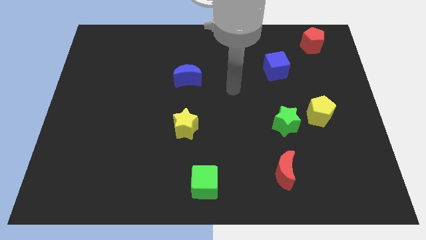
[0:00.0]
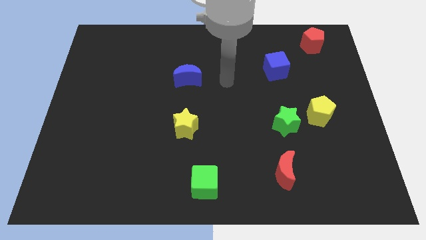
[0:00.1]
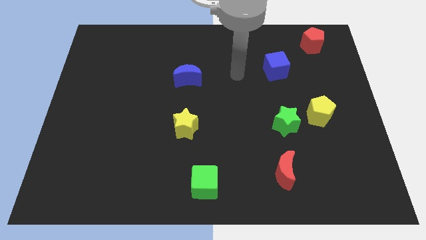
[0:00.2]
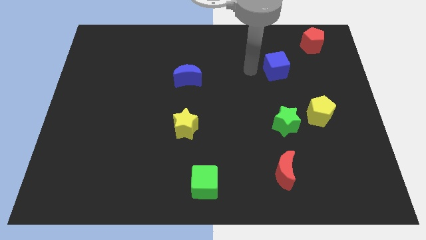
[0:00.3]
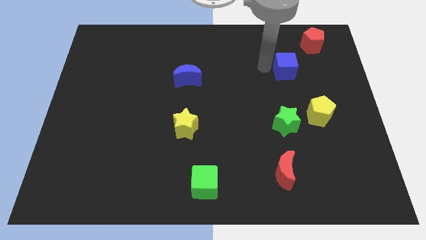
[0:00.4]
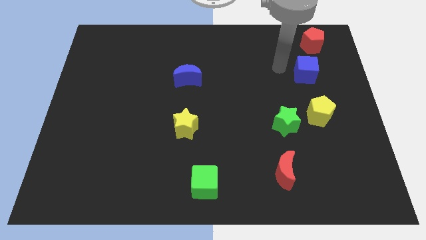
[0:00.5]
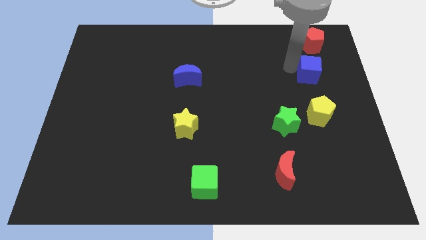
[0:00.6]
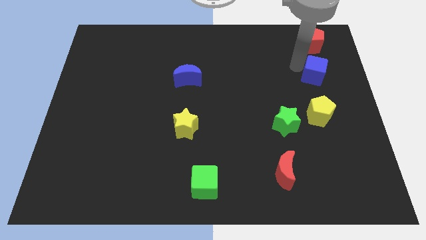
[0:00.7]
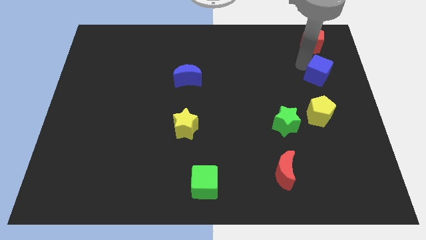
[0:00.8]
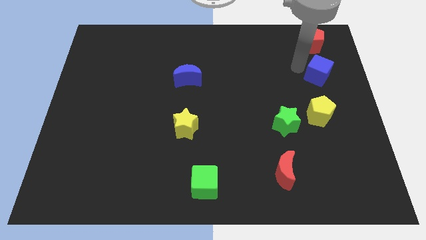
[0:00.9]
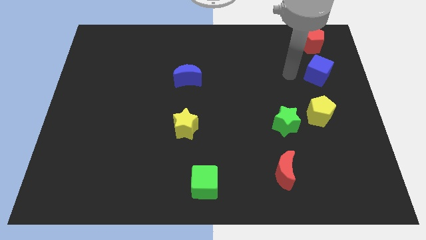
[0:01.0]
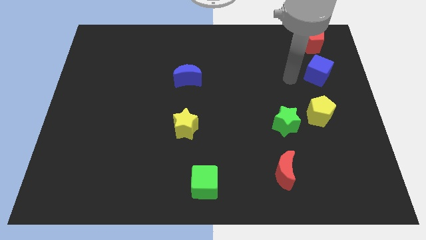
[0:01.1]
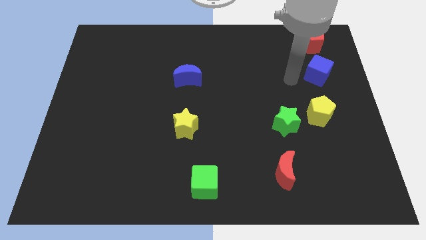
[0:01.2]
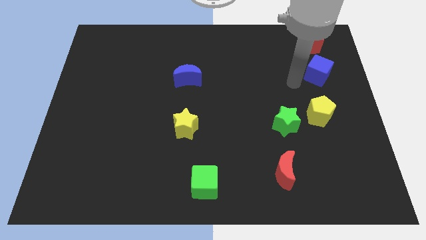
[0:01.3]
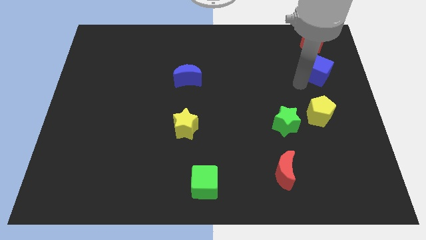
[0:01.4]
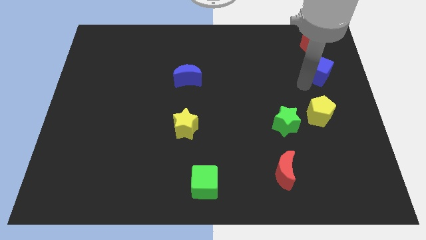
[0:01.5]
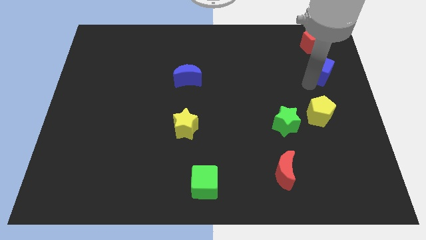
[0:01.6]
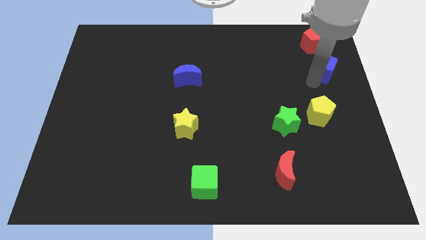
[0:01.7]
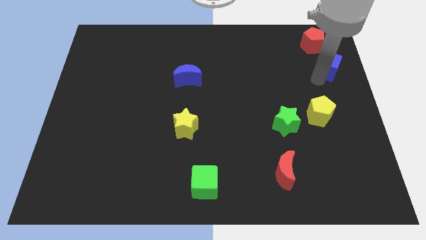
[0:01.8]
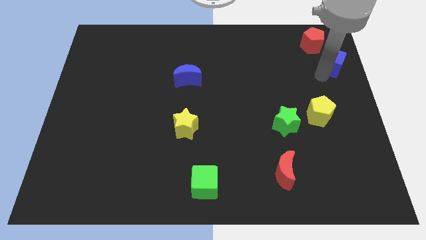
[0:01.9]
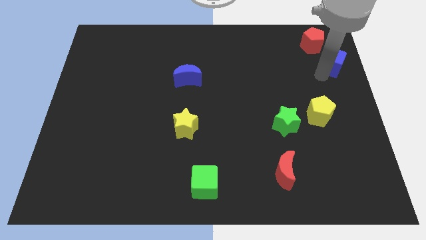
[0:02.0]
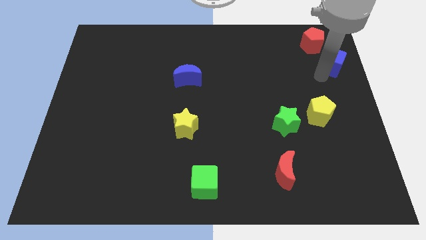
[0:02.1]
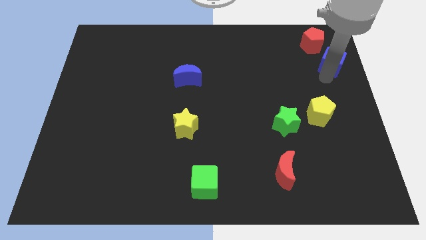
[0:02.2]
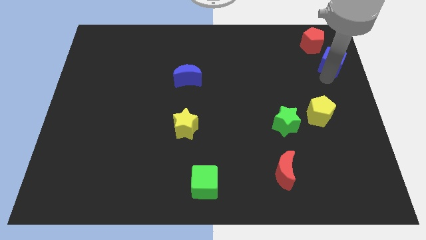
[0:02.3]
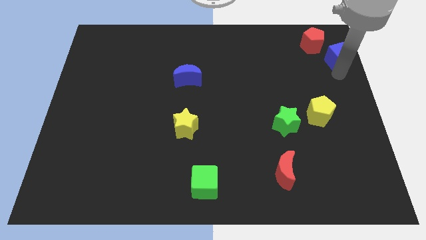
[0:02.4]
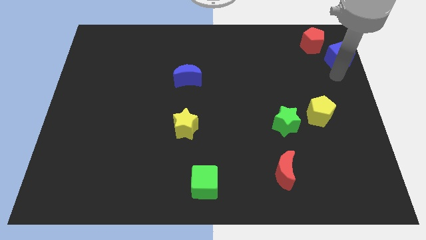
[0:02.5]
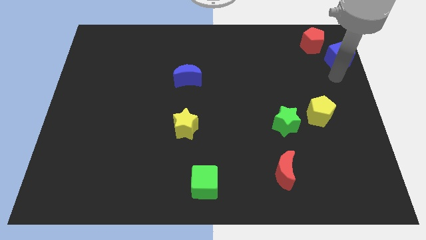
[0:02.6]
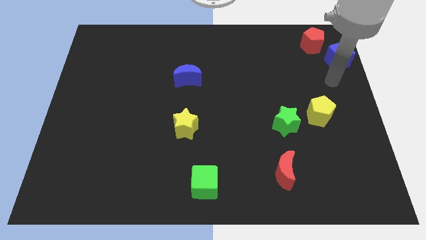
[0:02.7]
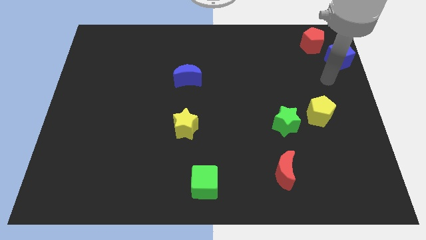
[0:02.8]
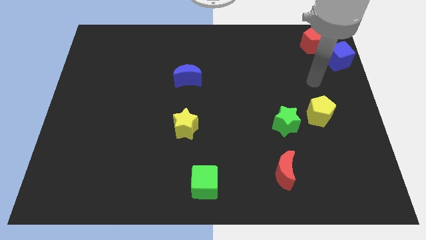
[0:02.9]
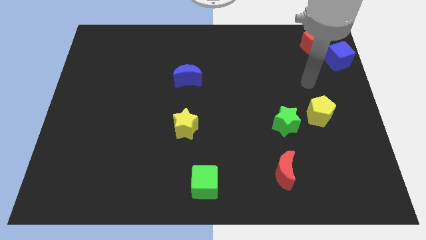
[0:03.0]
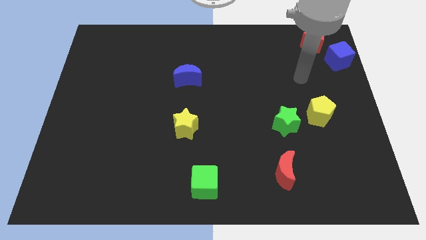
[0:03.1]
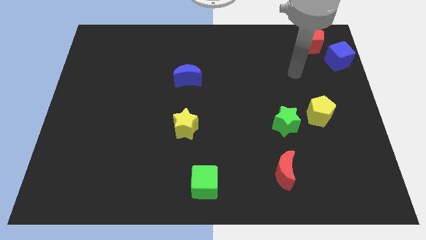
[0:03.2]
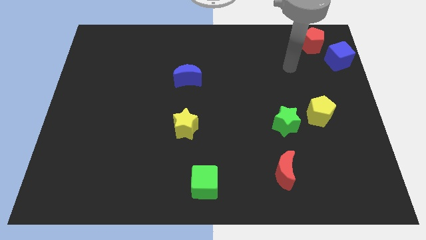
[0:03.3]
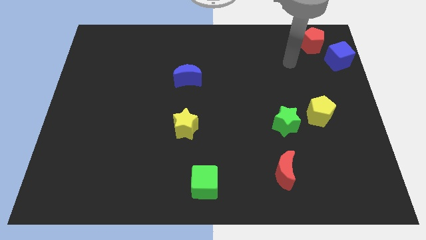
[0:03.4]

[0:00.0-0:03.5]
push the blue cube to the bottom right of the red pentagon

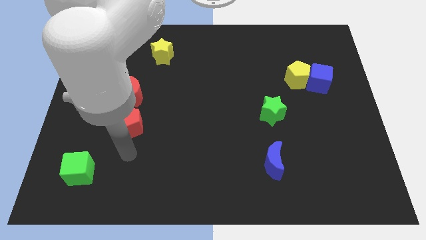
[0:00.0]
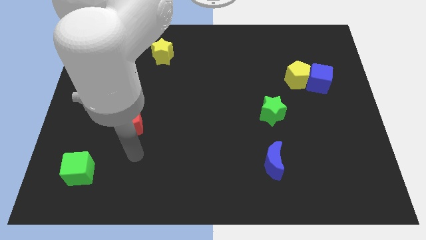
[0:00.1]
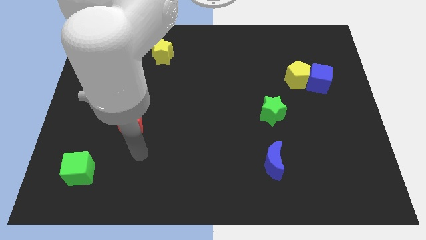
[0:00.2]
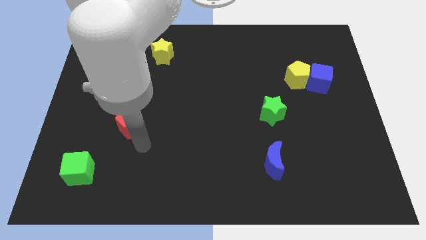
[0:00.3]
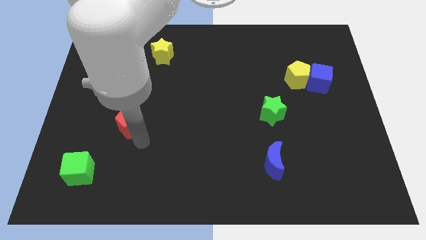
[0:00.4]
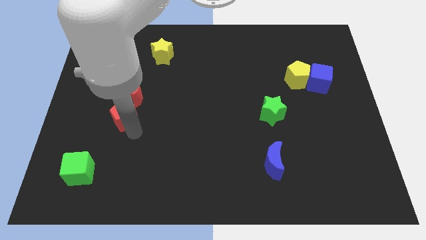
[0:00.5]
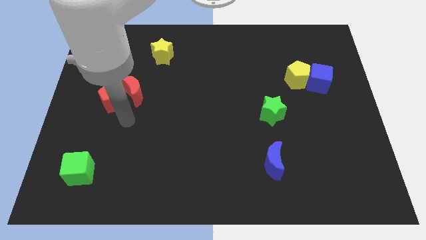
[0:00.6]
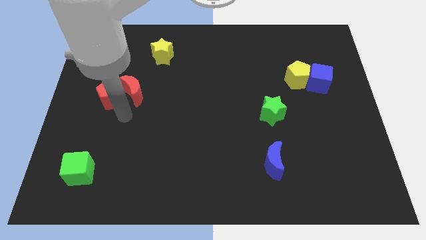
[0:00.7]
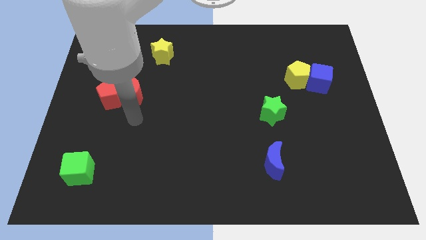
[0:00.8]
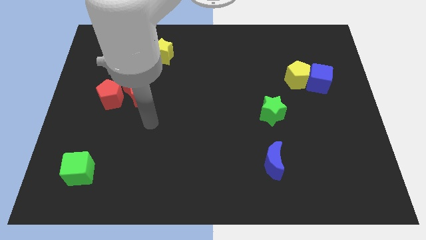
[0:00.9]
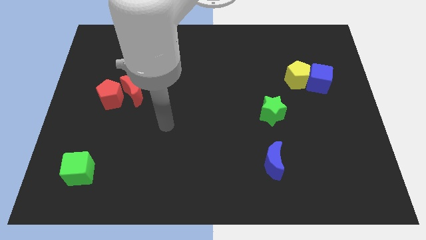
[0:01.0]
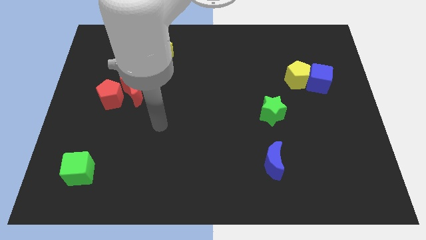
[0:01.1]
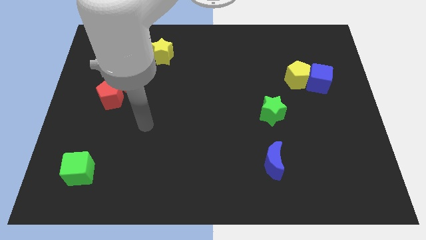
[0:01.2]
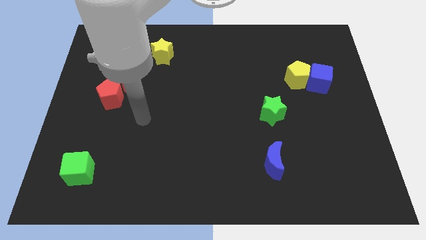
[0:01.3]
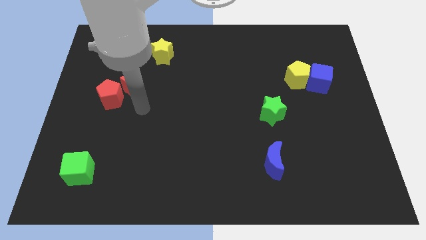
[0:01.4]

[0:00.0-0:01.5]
place red pentagon beside red moon

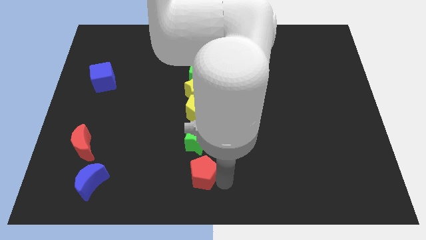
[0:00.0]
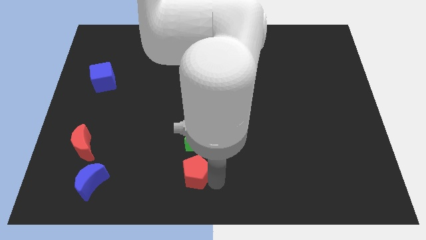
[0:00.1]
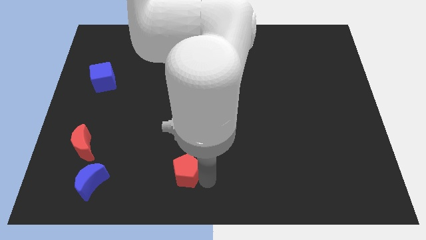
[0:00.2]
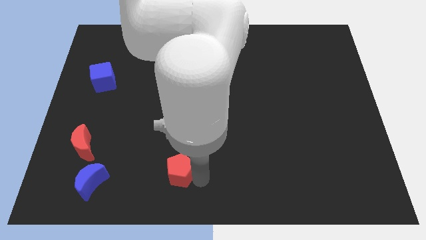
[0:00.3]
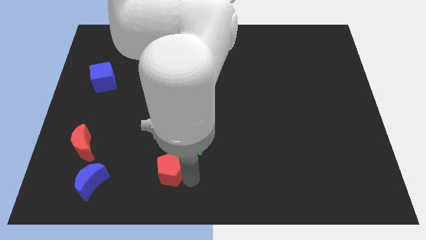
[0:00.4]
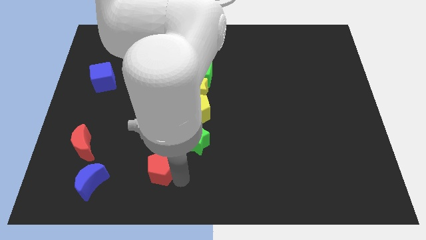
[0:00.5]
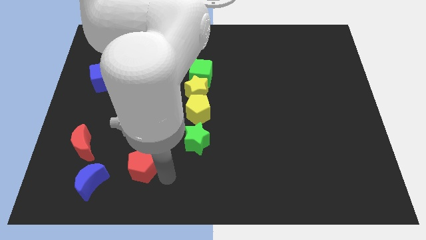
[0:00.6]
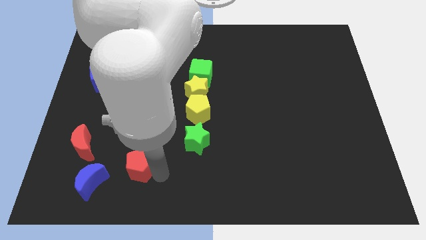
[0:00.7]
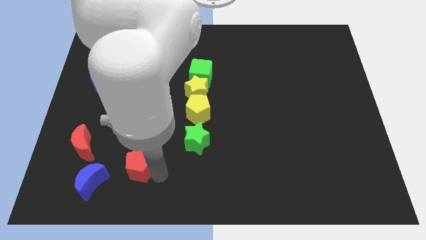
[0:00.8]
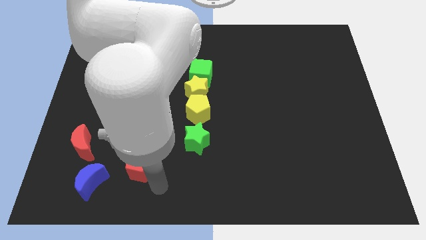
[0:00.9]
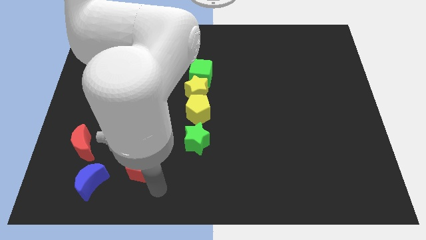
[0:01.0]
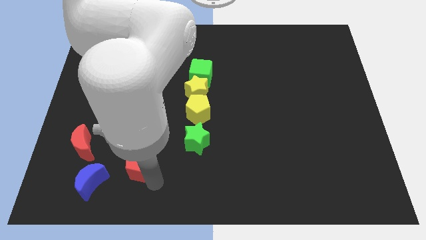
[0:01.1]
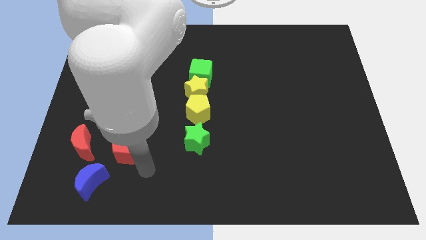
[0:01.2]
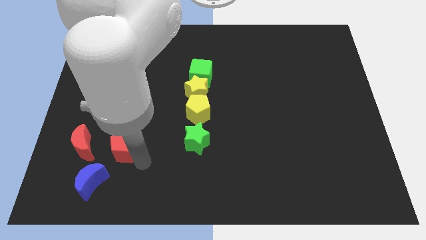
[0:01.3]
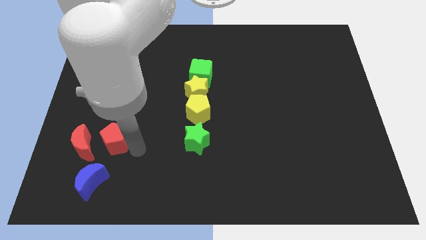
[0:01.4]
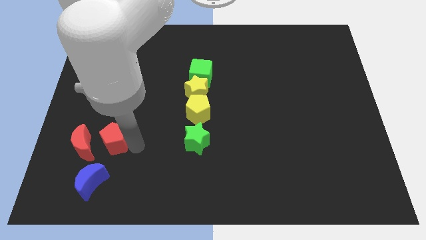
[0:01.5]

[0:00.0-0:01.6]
move the red pentagon right to the red crescent

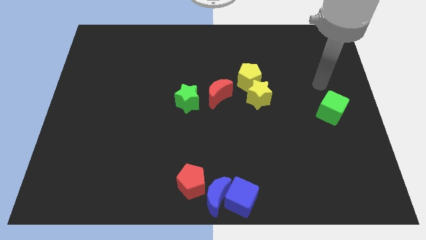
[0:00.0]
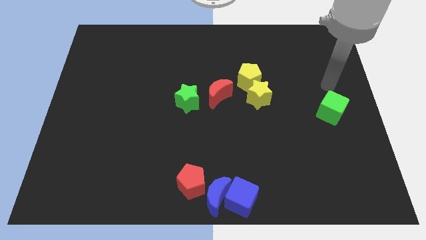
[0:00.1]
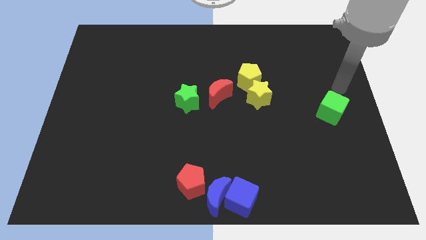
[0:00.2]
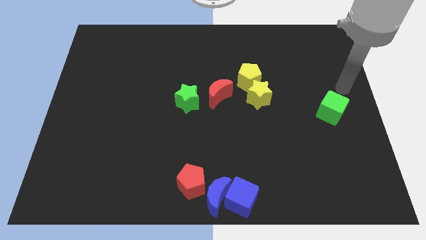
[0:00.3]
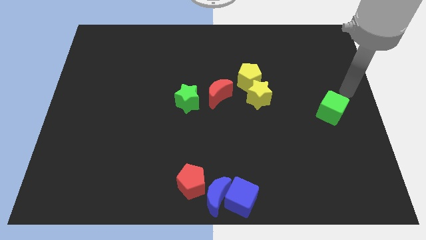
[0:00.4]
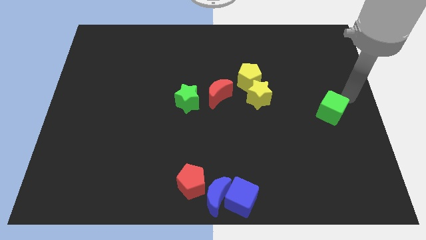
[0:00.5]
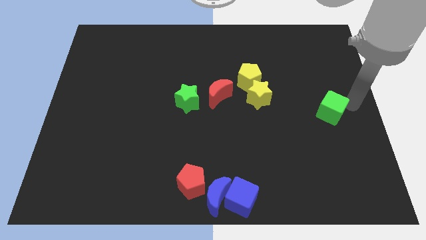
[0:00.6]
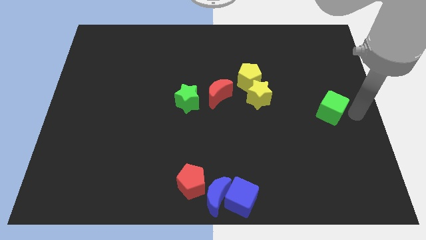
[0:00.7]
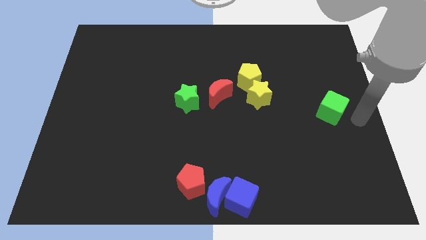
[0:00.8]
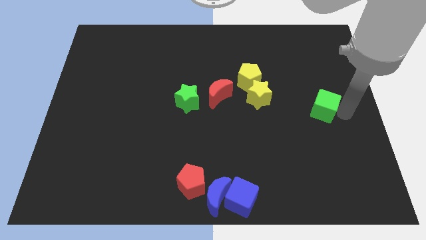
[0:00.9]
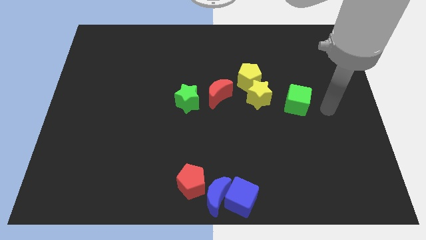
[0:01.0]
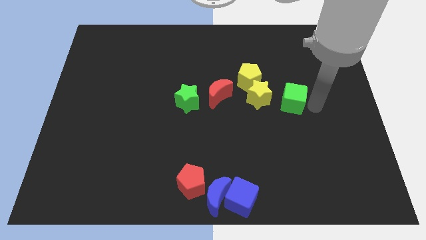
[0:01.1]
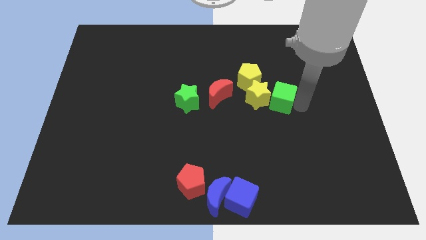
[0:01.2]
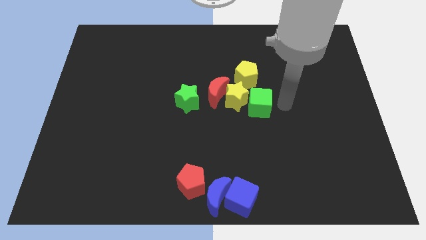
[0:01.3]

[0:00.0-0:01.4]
push the green cube into the group of blocks at the center of the board

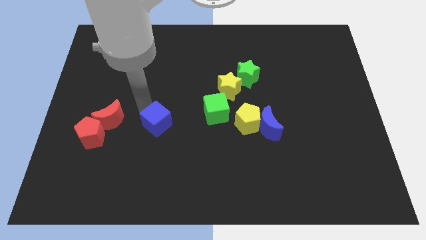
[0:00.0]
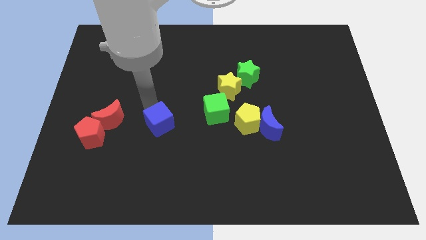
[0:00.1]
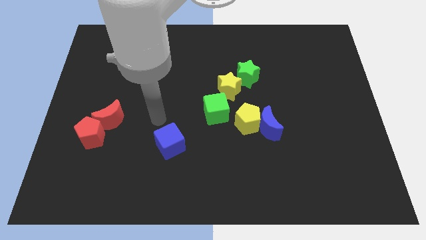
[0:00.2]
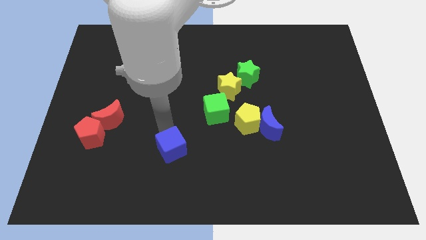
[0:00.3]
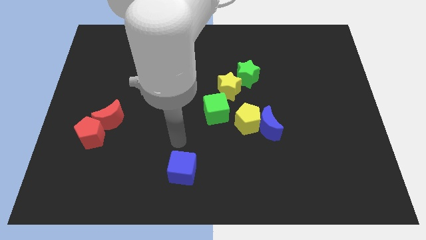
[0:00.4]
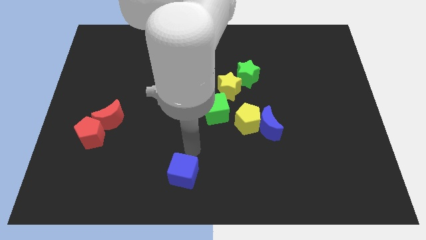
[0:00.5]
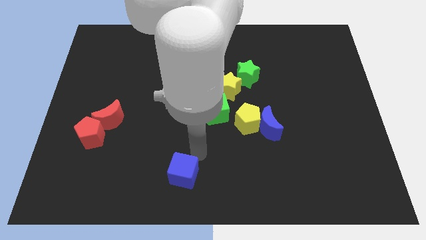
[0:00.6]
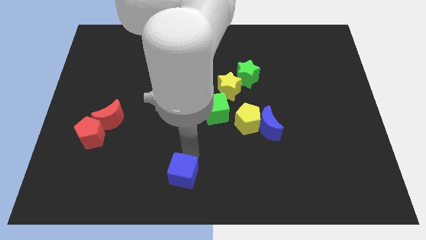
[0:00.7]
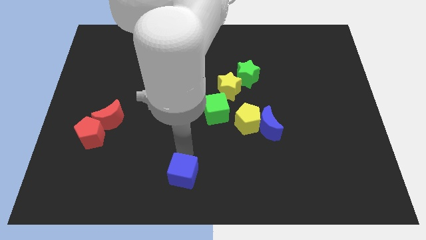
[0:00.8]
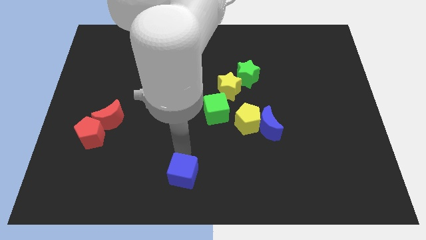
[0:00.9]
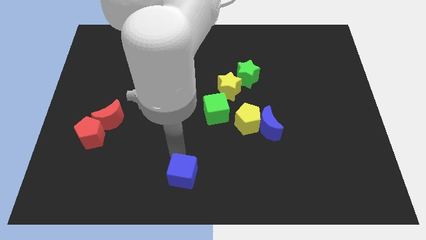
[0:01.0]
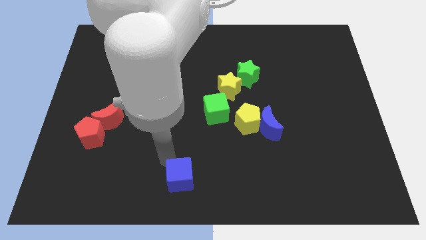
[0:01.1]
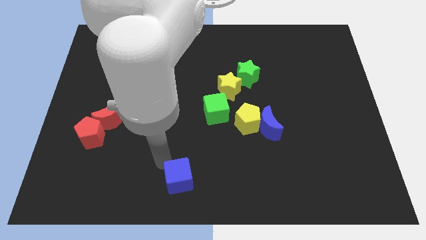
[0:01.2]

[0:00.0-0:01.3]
push the blue cube downward
